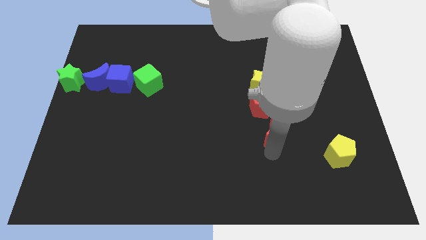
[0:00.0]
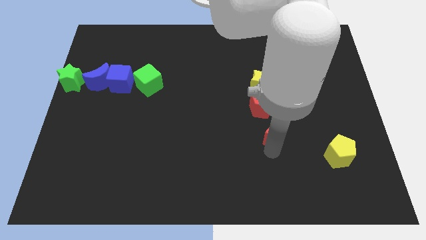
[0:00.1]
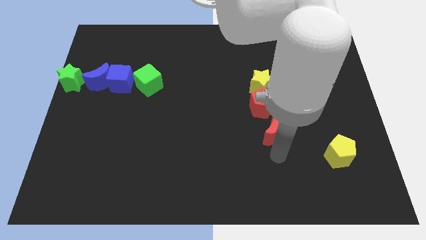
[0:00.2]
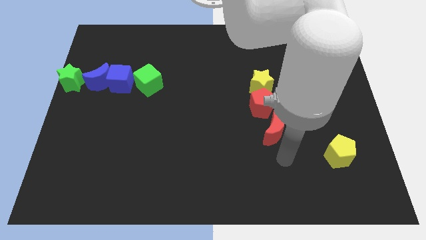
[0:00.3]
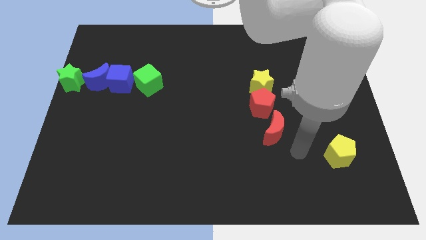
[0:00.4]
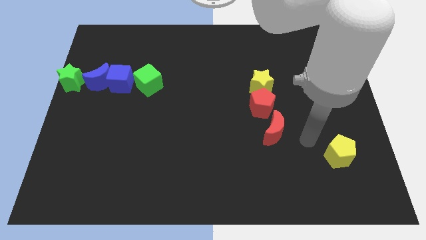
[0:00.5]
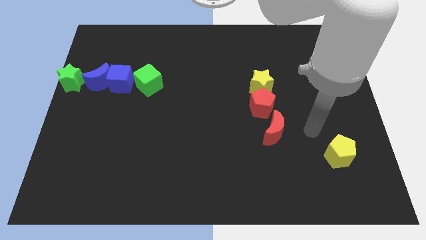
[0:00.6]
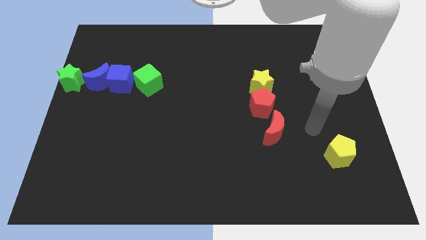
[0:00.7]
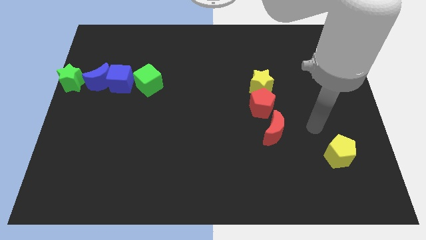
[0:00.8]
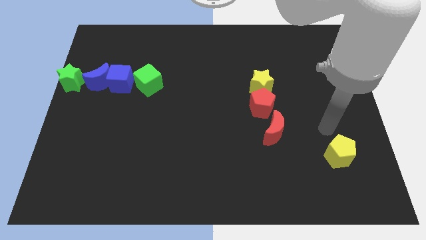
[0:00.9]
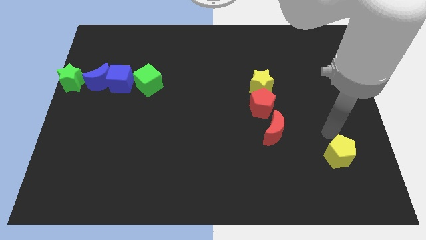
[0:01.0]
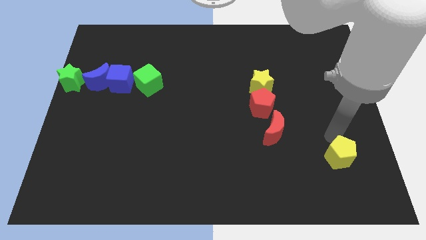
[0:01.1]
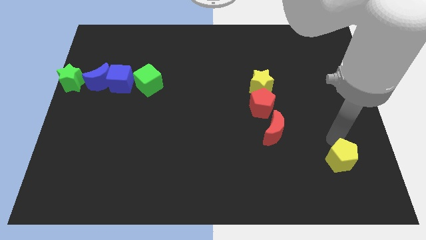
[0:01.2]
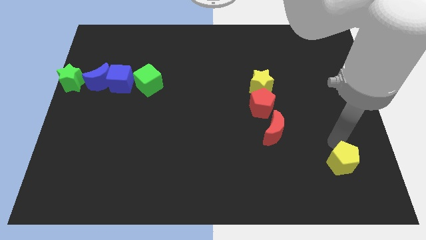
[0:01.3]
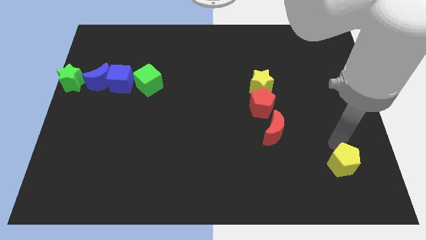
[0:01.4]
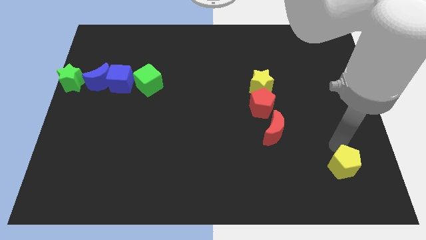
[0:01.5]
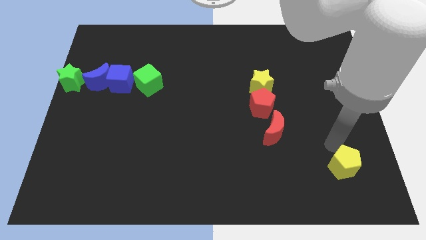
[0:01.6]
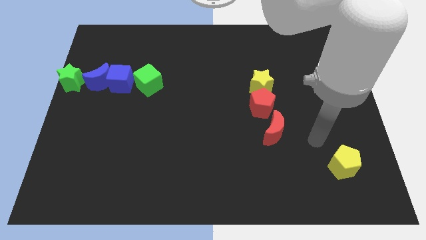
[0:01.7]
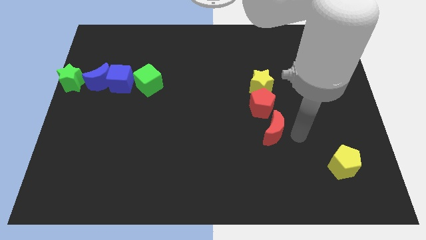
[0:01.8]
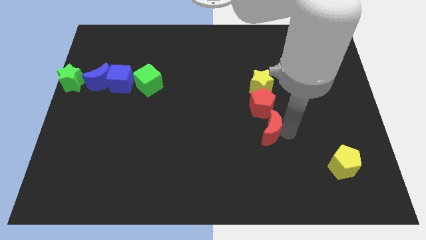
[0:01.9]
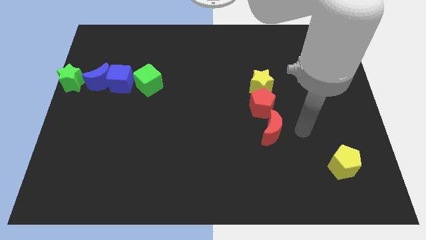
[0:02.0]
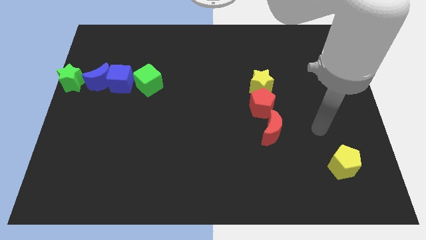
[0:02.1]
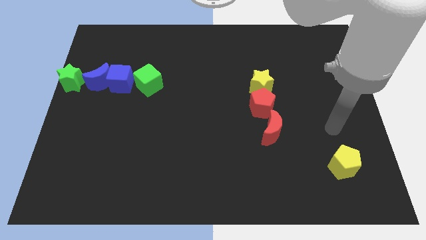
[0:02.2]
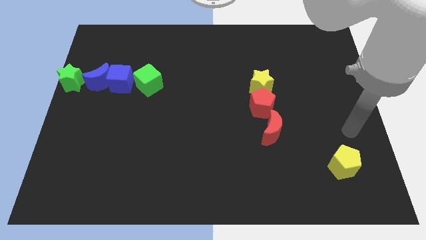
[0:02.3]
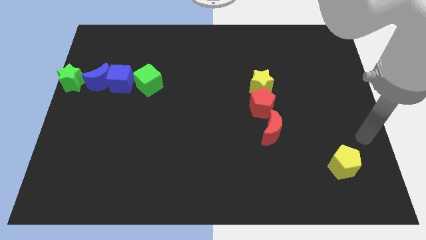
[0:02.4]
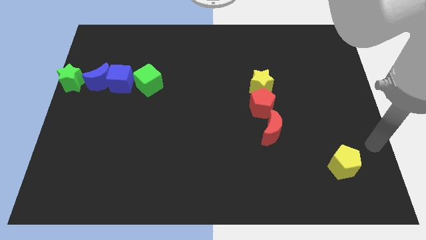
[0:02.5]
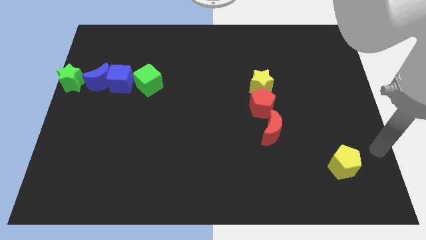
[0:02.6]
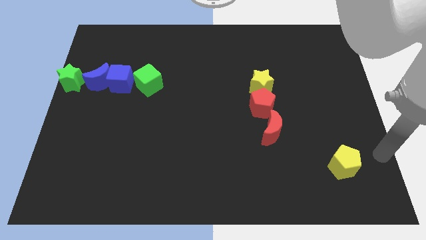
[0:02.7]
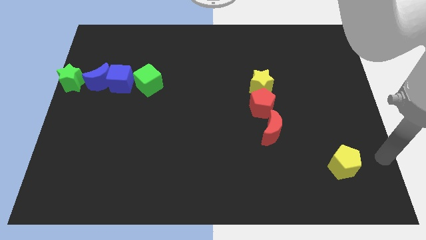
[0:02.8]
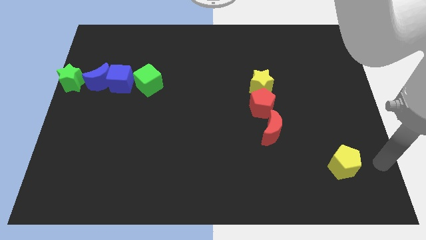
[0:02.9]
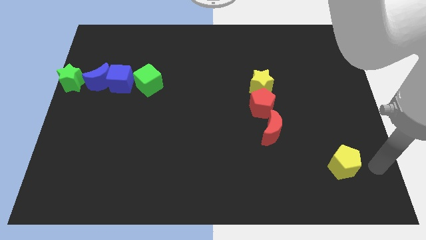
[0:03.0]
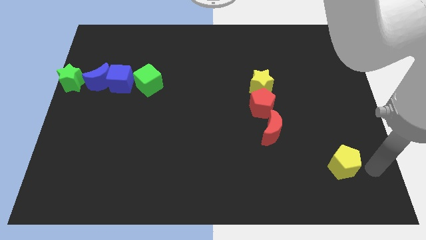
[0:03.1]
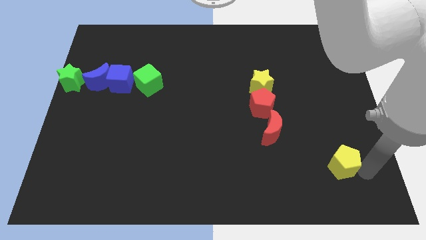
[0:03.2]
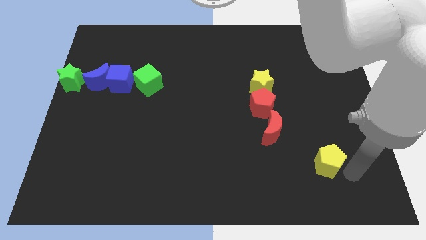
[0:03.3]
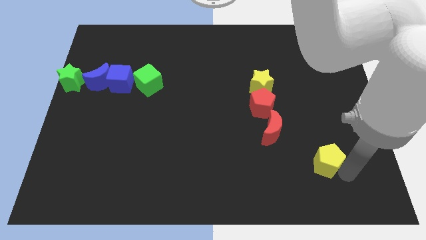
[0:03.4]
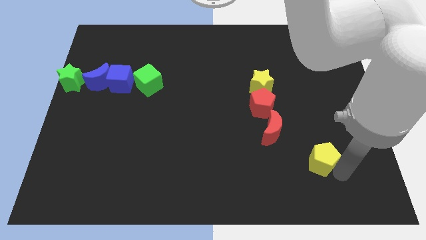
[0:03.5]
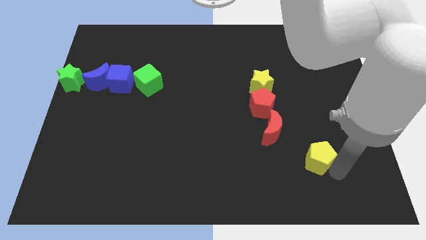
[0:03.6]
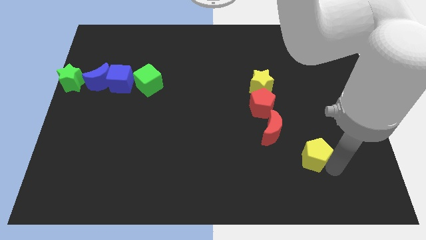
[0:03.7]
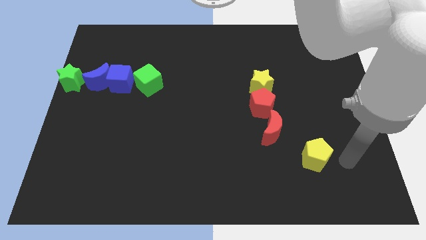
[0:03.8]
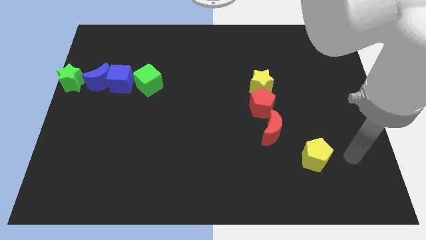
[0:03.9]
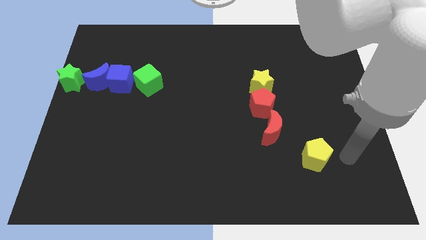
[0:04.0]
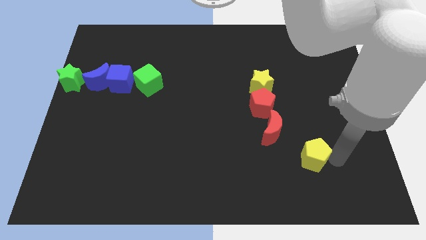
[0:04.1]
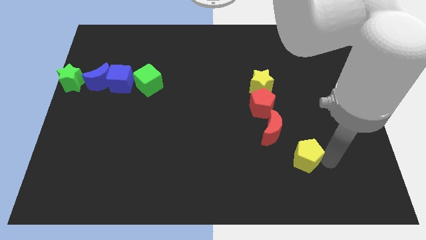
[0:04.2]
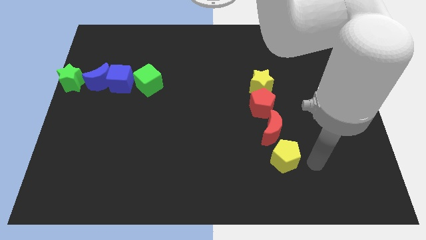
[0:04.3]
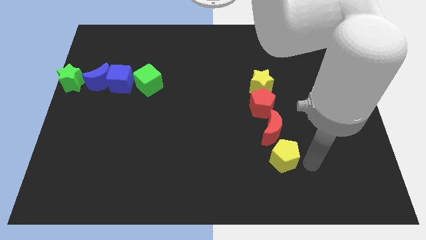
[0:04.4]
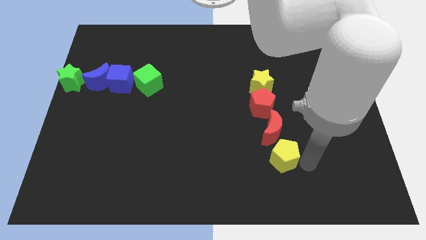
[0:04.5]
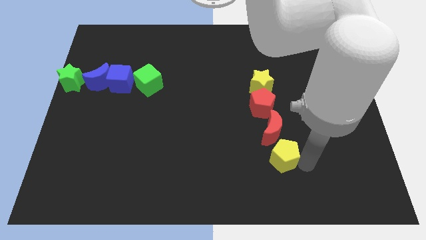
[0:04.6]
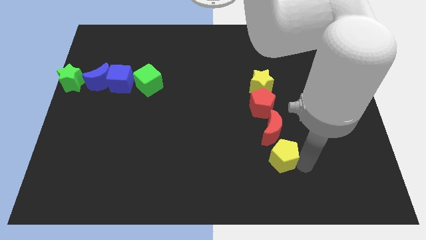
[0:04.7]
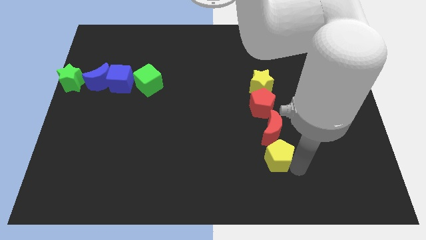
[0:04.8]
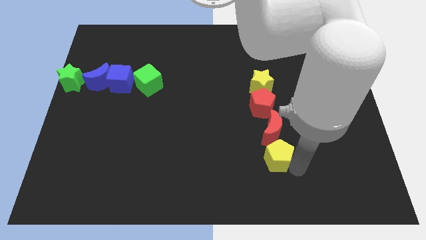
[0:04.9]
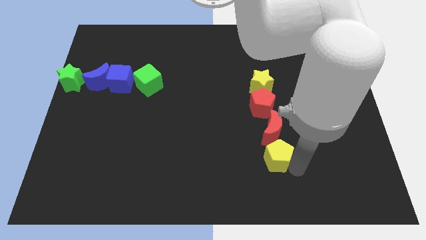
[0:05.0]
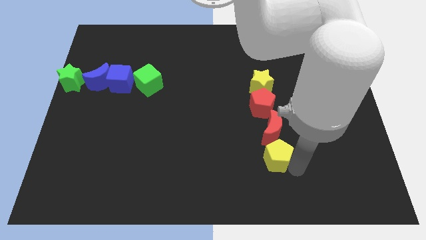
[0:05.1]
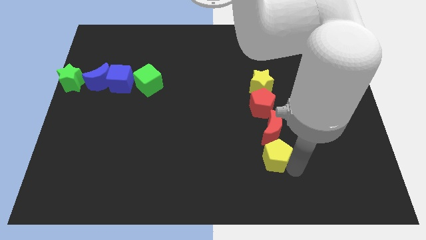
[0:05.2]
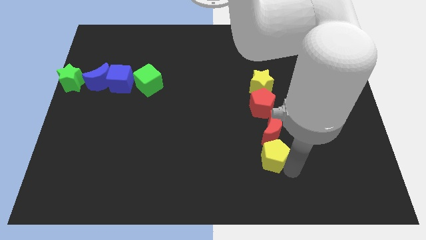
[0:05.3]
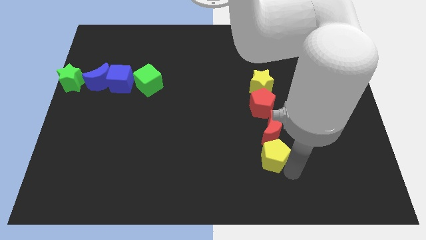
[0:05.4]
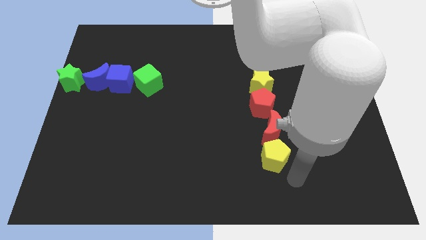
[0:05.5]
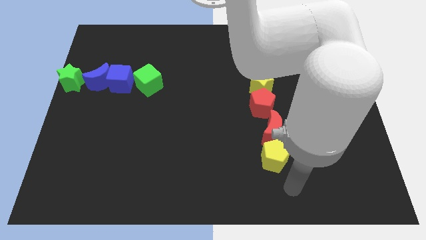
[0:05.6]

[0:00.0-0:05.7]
push the yellow pentagon close to the bottom side of the red crescent

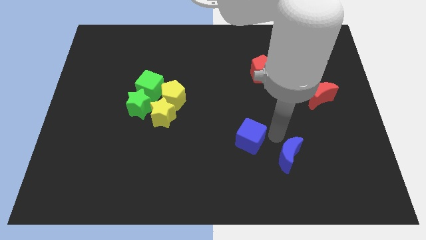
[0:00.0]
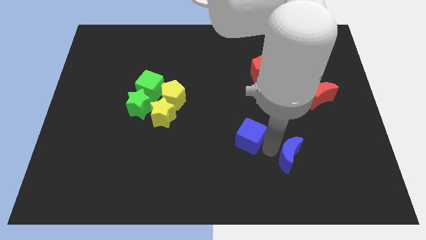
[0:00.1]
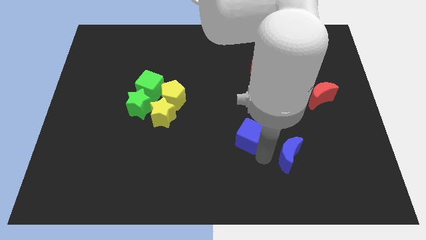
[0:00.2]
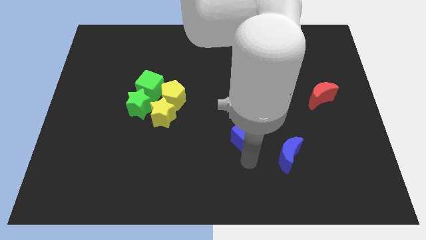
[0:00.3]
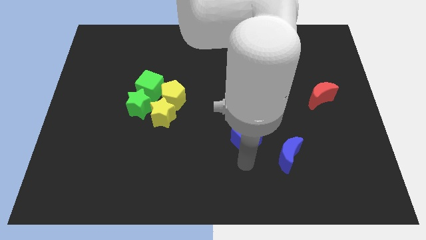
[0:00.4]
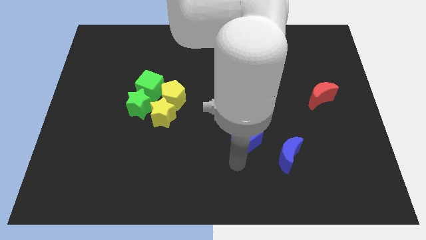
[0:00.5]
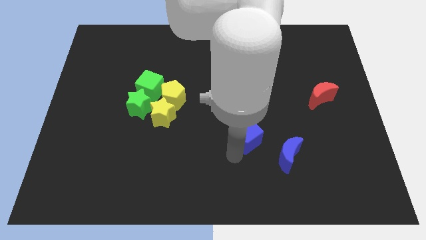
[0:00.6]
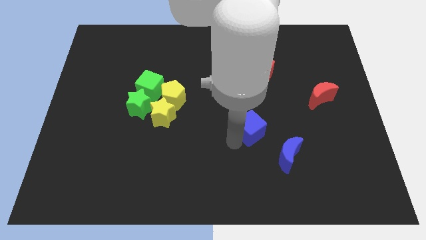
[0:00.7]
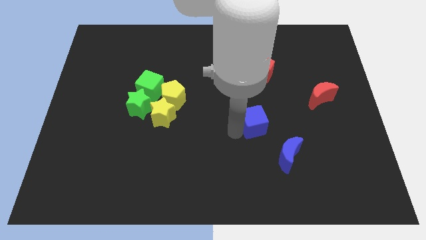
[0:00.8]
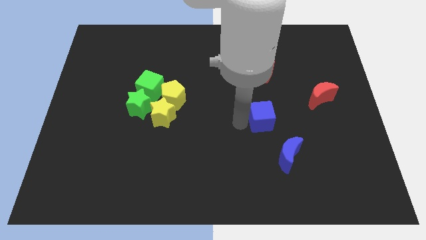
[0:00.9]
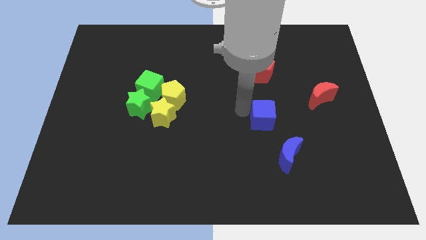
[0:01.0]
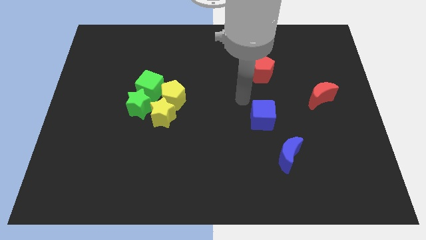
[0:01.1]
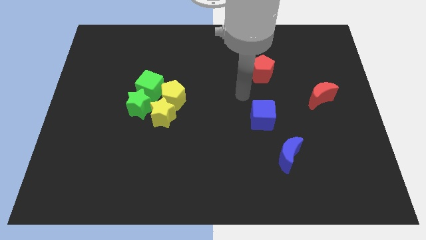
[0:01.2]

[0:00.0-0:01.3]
place blue cube to the bottom of red pentagon

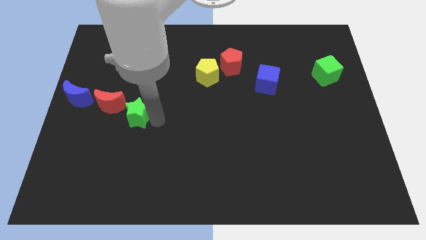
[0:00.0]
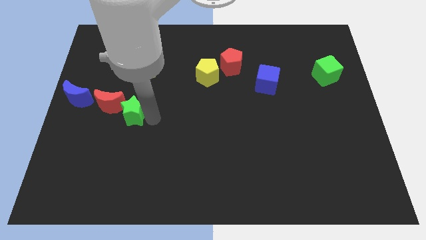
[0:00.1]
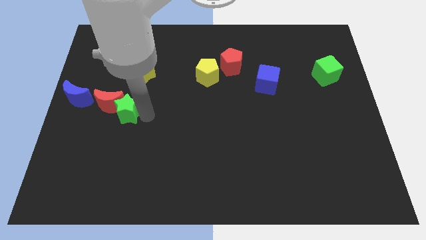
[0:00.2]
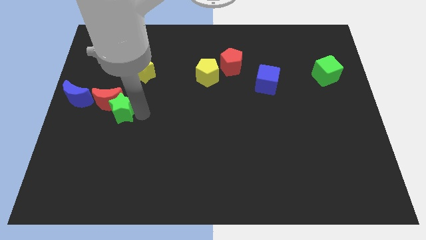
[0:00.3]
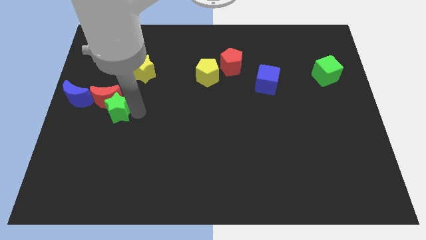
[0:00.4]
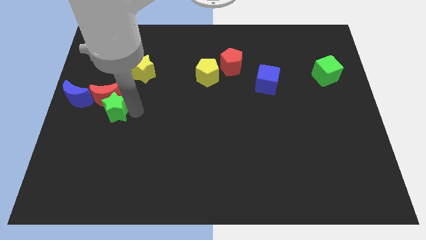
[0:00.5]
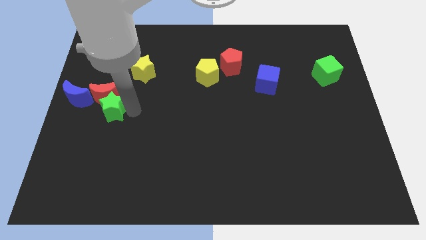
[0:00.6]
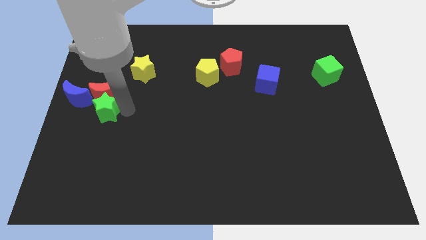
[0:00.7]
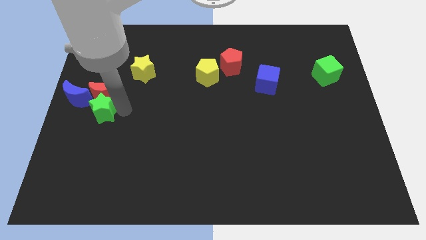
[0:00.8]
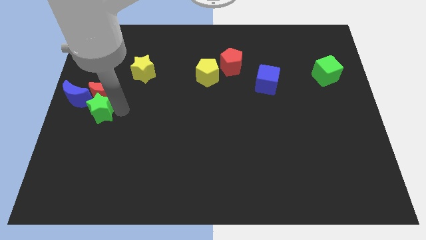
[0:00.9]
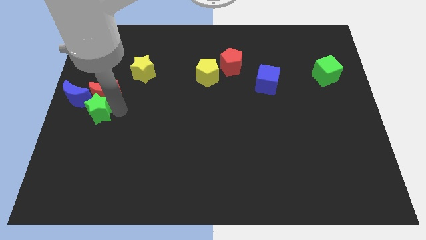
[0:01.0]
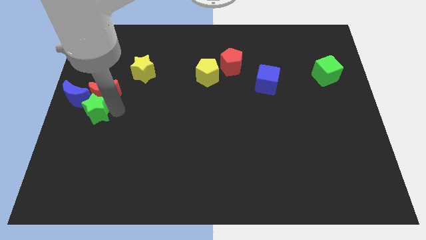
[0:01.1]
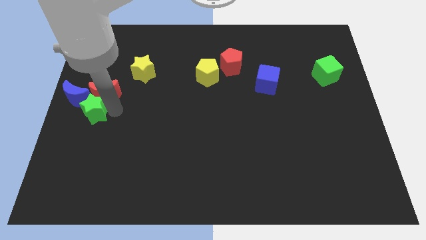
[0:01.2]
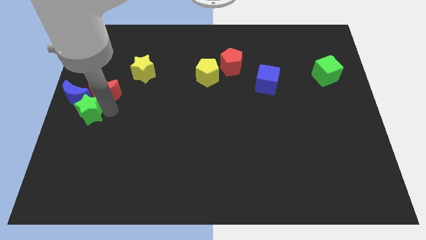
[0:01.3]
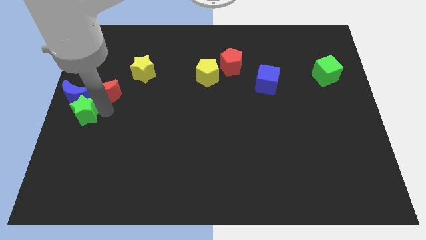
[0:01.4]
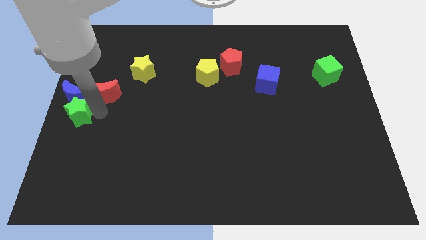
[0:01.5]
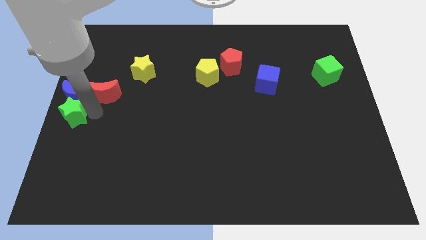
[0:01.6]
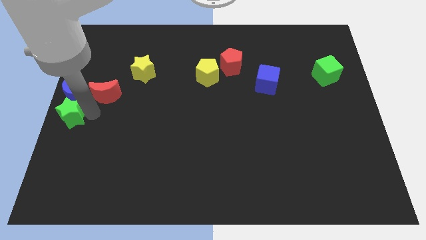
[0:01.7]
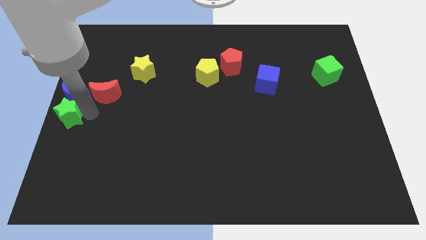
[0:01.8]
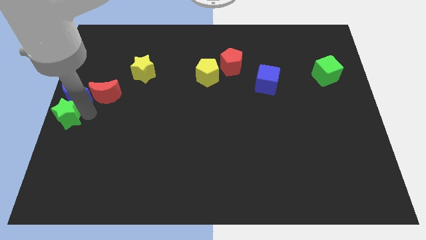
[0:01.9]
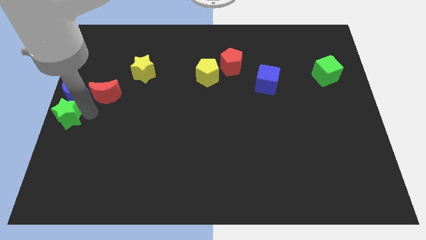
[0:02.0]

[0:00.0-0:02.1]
place the green star below the blue moon
